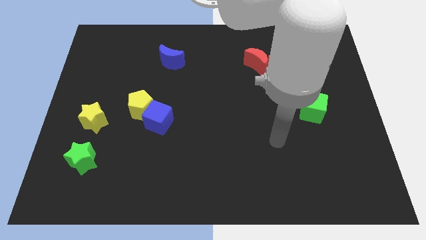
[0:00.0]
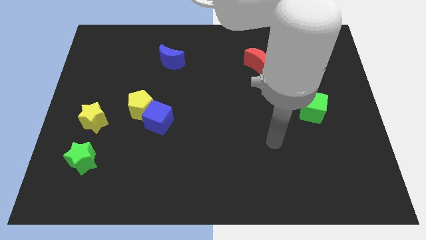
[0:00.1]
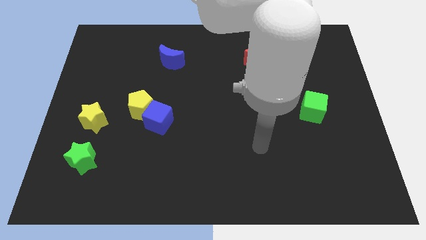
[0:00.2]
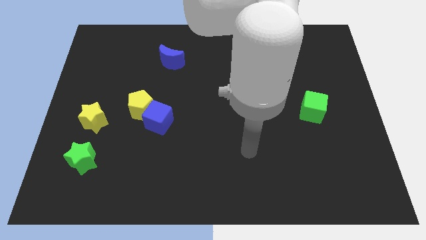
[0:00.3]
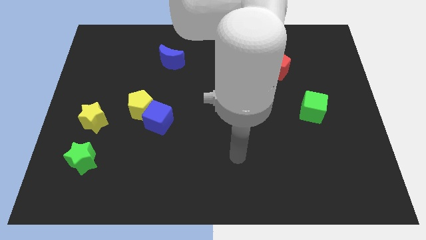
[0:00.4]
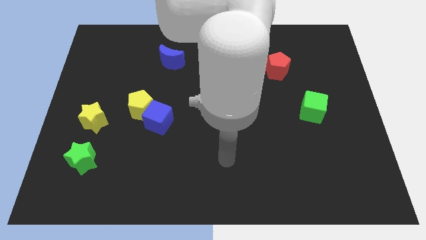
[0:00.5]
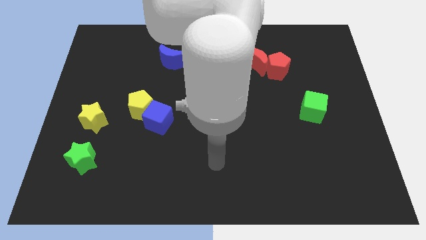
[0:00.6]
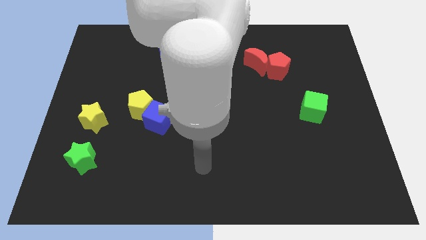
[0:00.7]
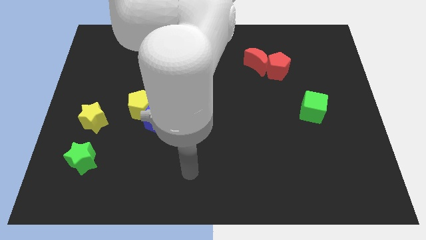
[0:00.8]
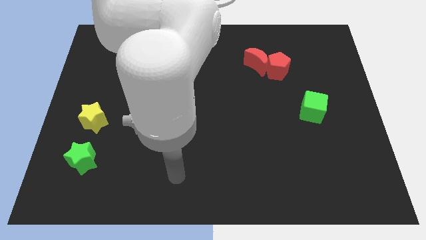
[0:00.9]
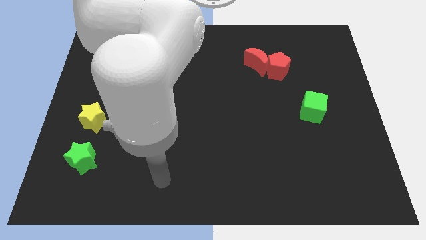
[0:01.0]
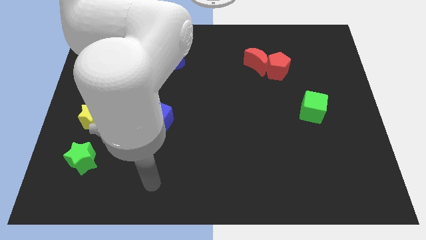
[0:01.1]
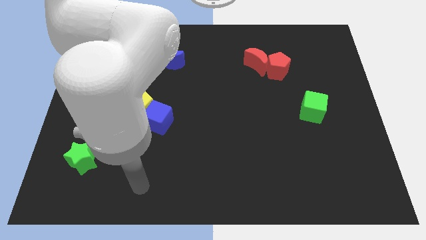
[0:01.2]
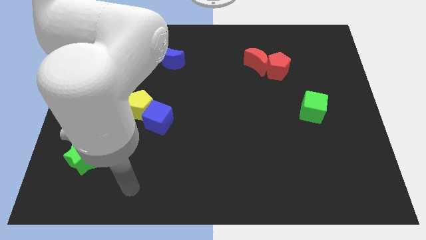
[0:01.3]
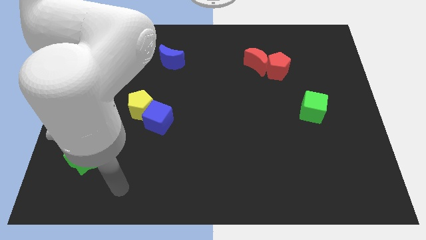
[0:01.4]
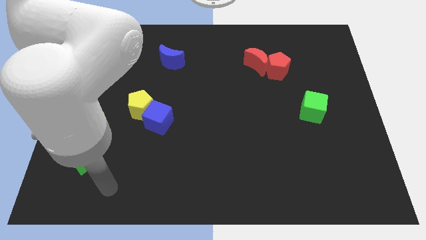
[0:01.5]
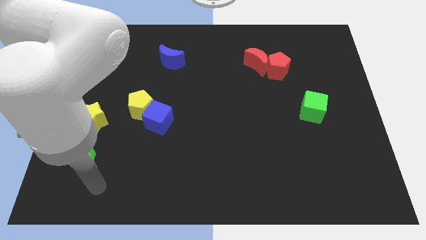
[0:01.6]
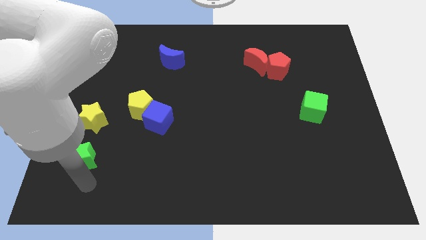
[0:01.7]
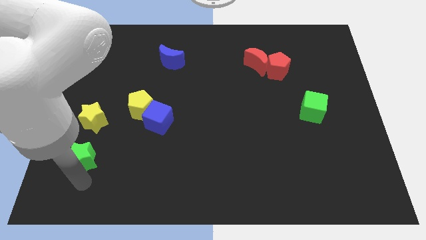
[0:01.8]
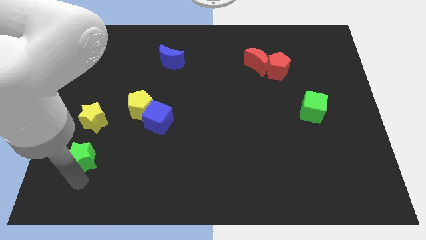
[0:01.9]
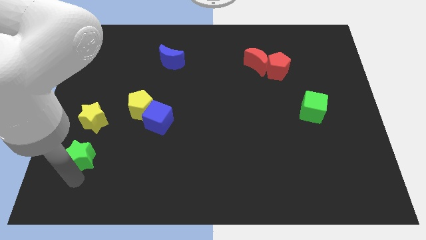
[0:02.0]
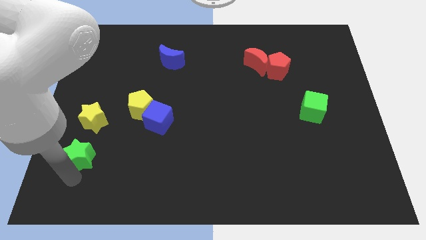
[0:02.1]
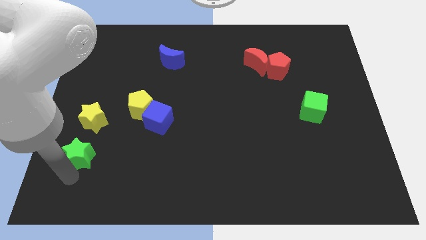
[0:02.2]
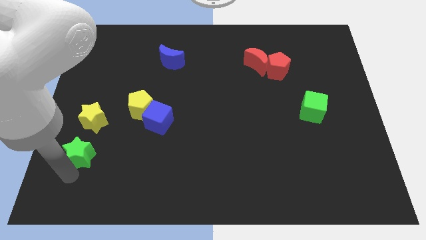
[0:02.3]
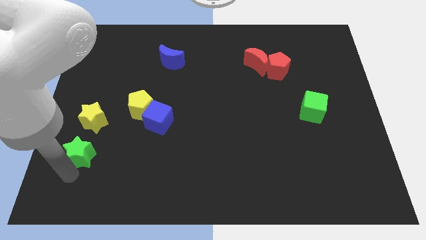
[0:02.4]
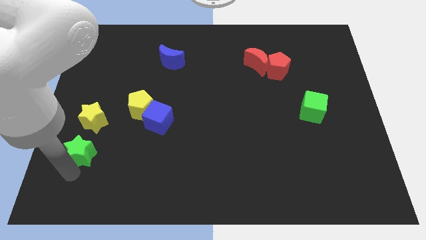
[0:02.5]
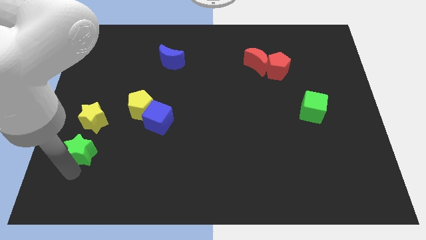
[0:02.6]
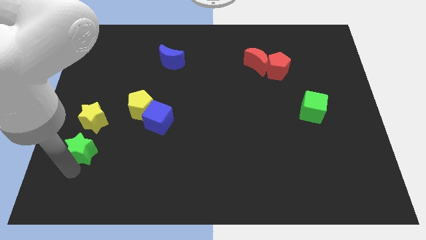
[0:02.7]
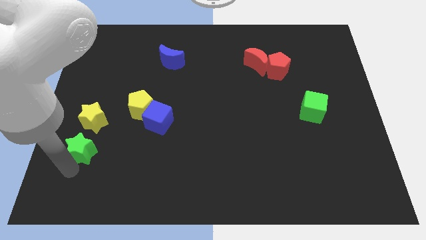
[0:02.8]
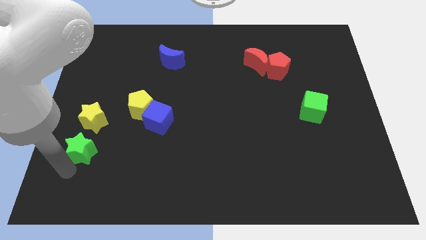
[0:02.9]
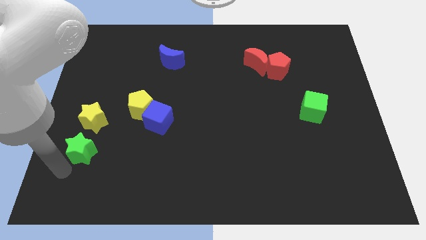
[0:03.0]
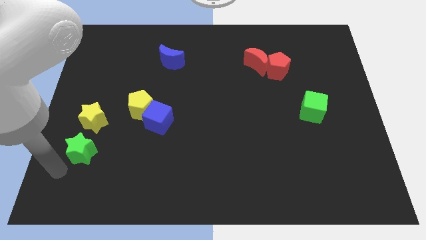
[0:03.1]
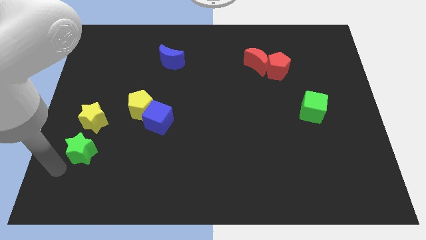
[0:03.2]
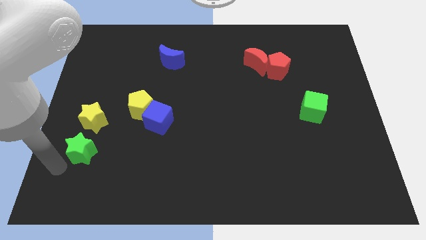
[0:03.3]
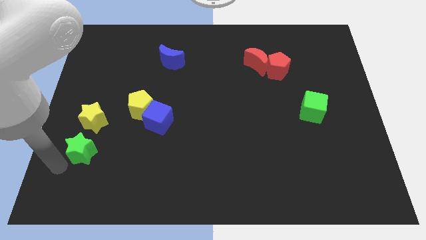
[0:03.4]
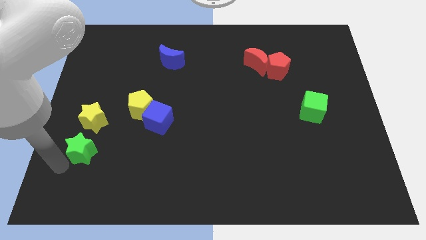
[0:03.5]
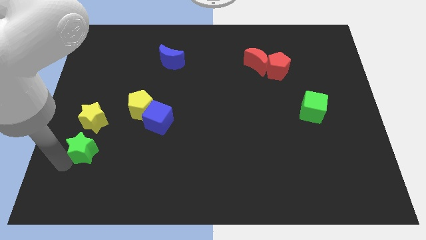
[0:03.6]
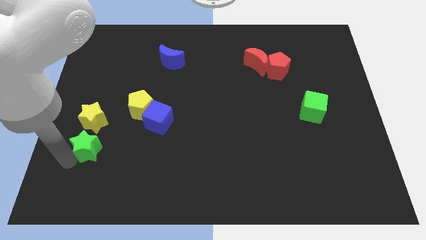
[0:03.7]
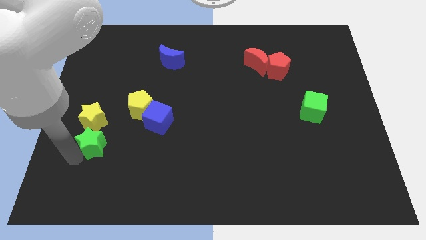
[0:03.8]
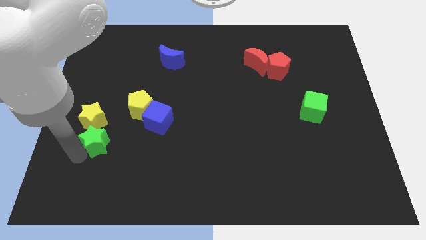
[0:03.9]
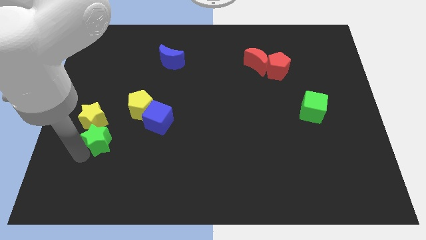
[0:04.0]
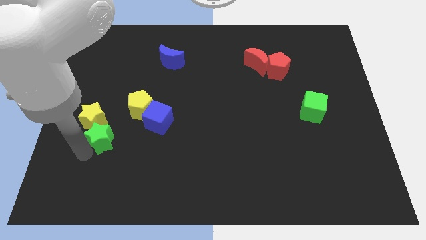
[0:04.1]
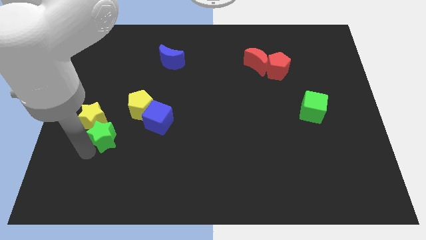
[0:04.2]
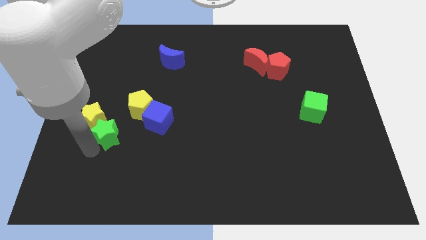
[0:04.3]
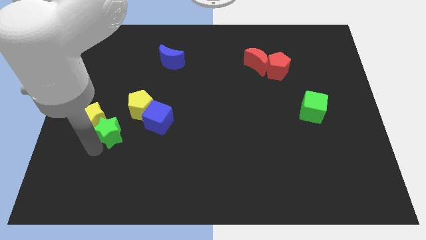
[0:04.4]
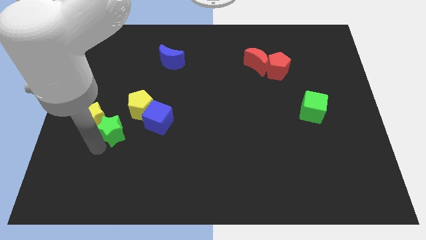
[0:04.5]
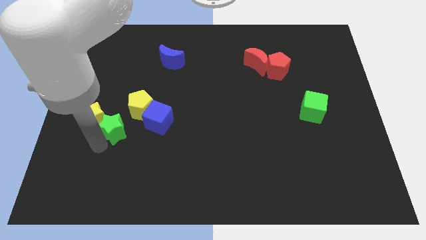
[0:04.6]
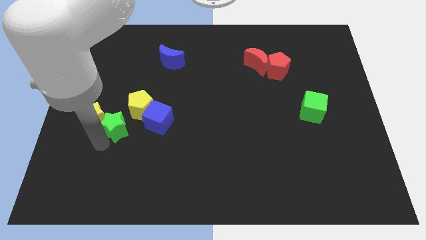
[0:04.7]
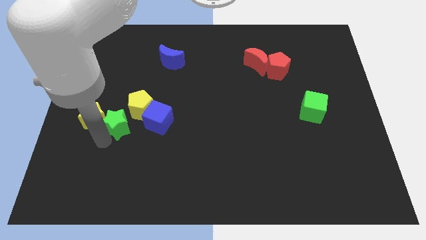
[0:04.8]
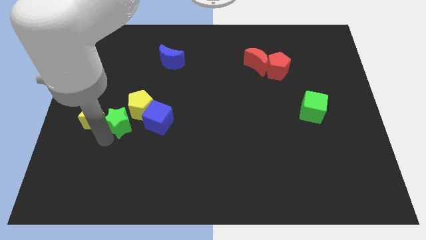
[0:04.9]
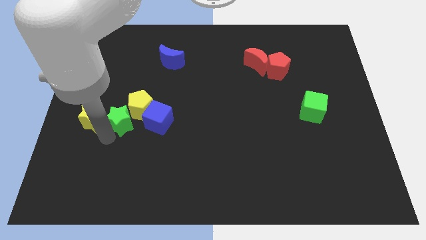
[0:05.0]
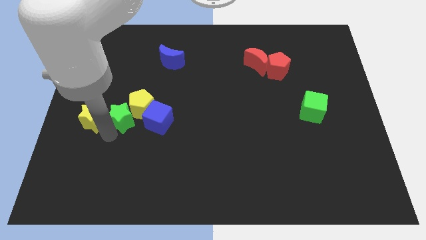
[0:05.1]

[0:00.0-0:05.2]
move the green star towards the yellow pentagon

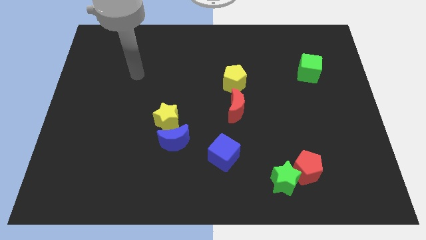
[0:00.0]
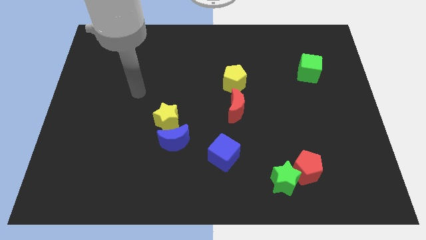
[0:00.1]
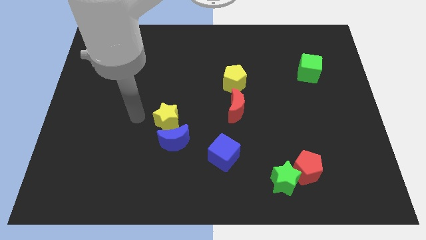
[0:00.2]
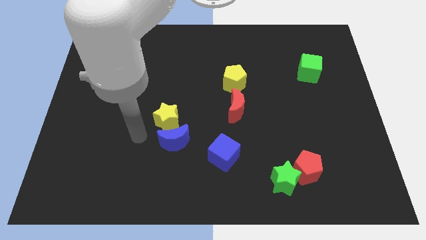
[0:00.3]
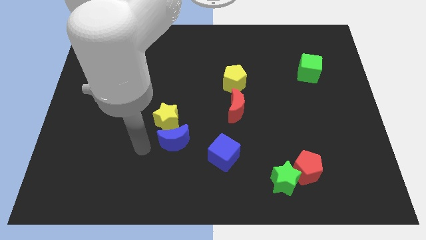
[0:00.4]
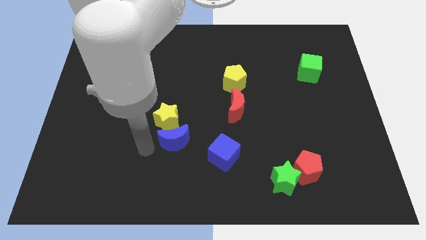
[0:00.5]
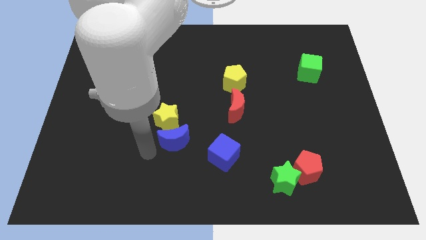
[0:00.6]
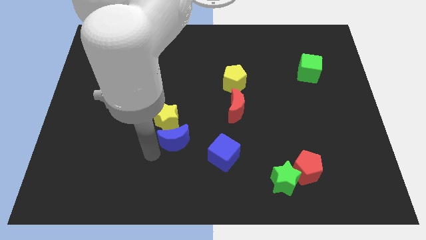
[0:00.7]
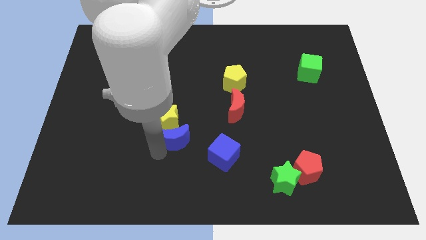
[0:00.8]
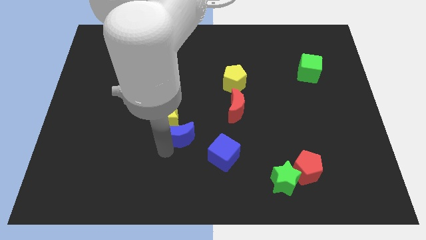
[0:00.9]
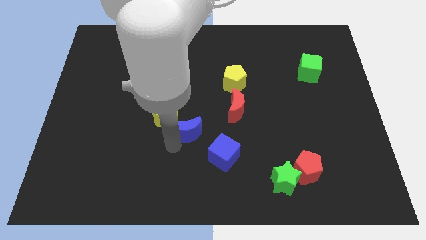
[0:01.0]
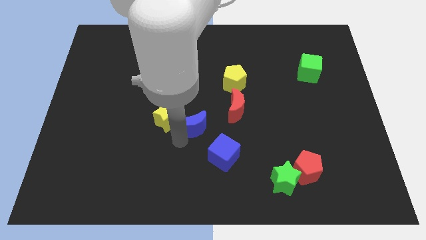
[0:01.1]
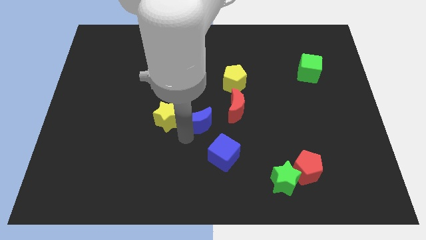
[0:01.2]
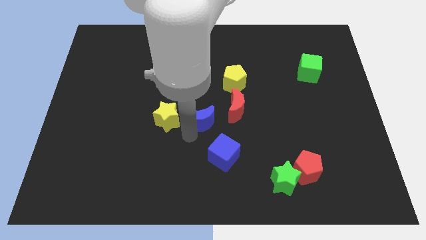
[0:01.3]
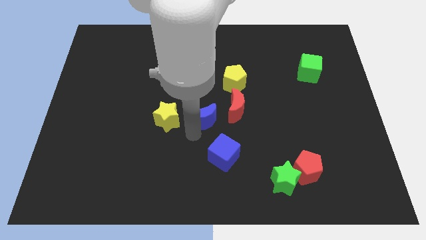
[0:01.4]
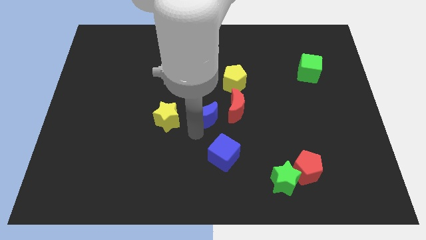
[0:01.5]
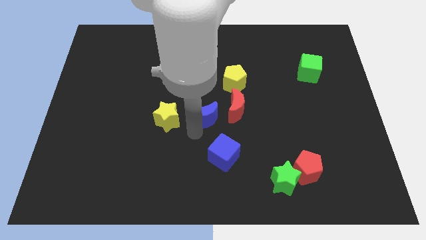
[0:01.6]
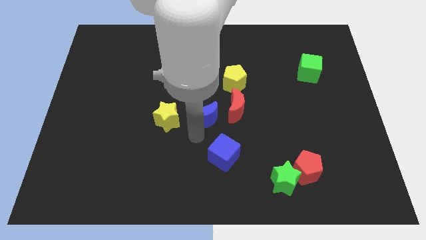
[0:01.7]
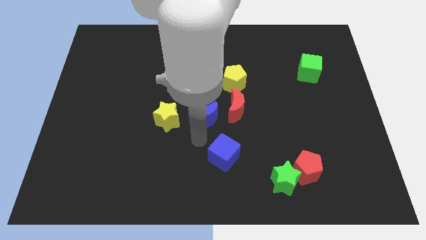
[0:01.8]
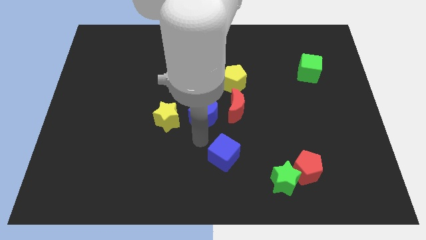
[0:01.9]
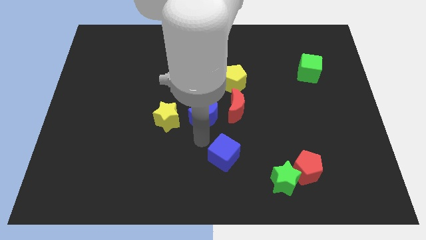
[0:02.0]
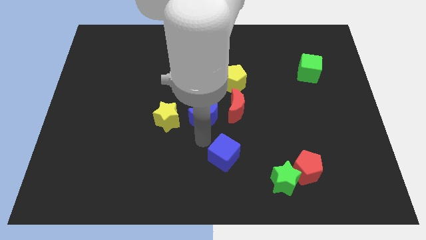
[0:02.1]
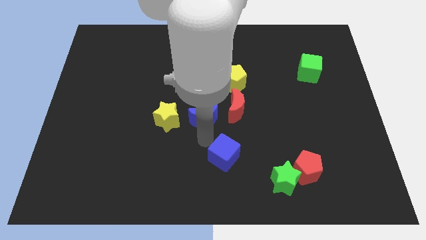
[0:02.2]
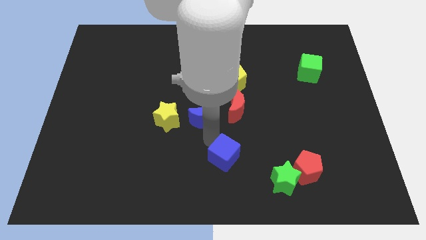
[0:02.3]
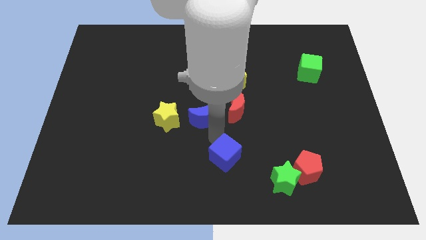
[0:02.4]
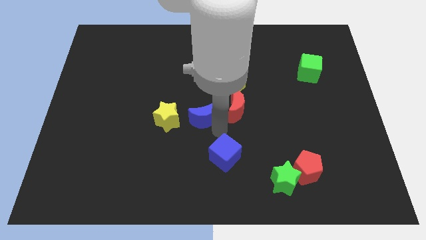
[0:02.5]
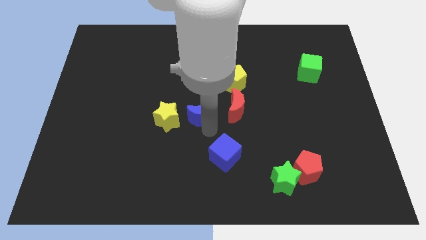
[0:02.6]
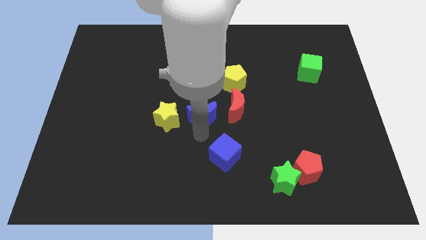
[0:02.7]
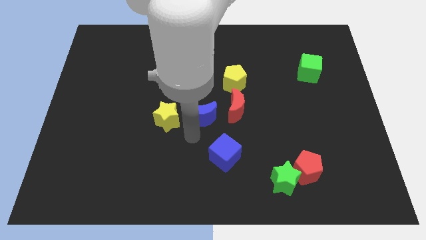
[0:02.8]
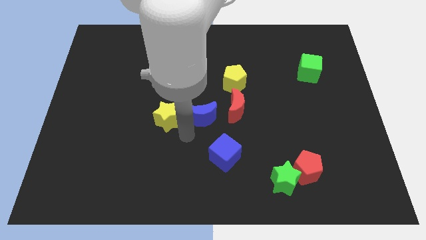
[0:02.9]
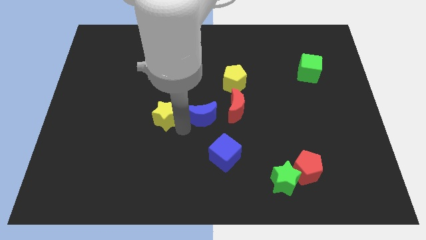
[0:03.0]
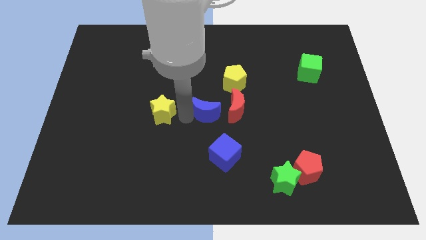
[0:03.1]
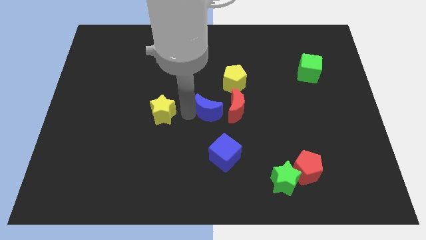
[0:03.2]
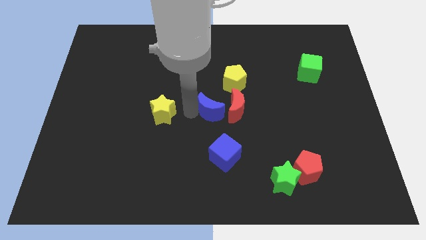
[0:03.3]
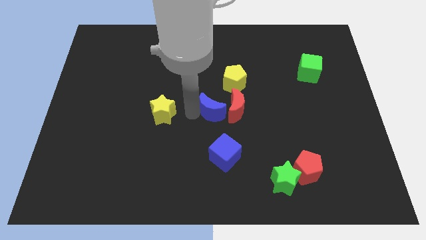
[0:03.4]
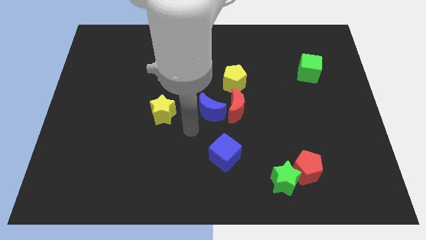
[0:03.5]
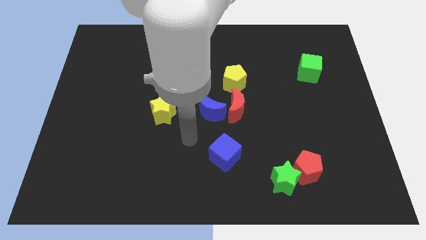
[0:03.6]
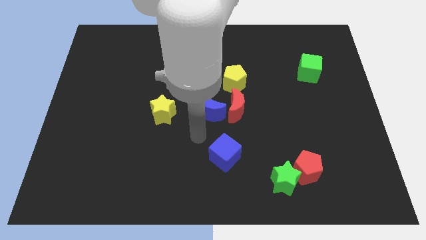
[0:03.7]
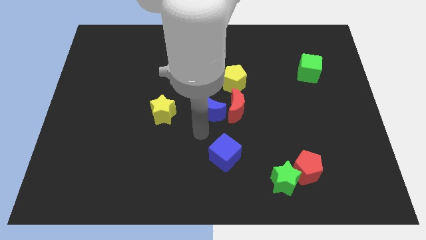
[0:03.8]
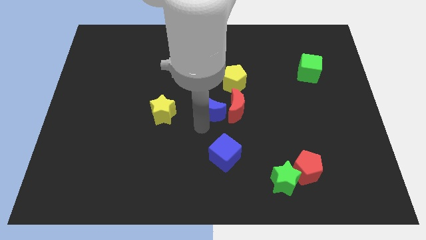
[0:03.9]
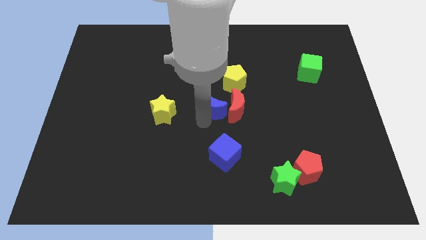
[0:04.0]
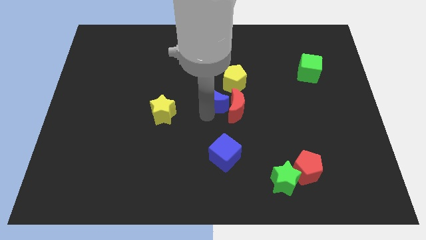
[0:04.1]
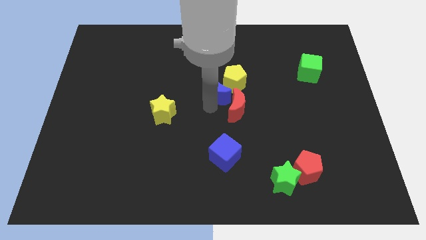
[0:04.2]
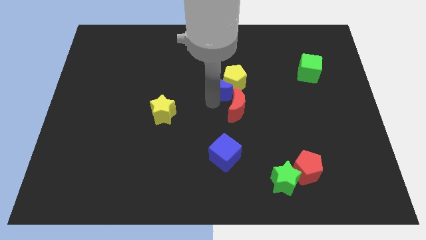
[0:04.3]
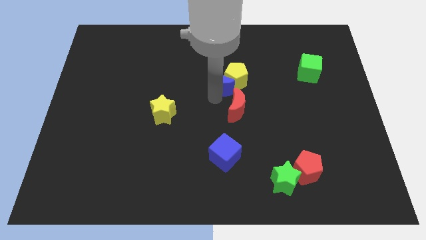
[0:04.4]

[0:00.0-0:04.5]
push the blue moon to the yellow pentagon
